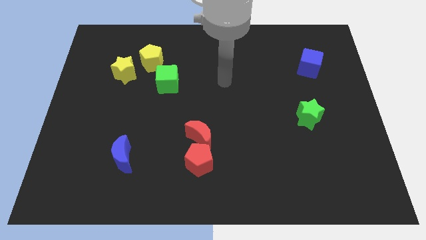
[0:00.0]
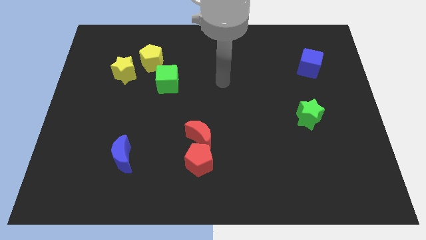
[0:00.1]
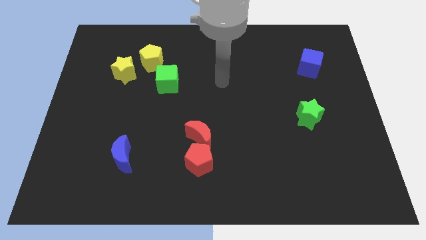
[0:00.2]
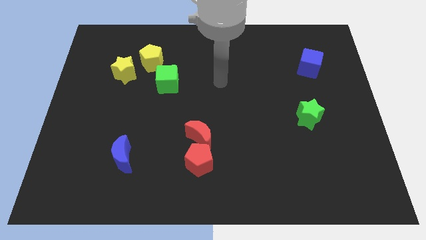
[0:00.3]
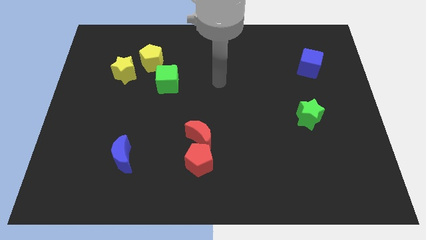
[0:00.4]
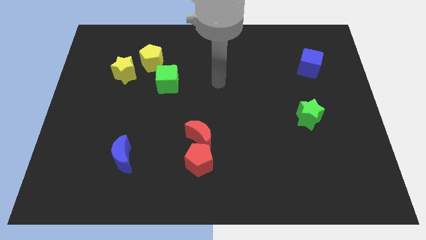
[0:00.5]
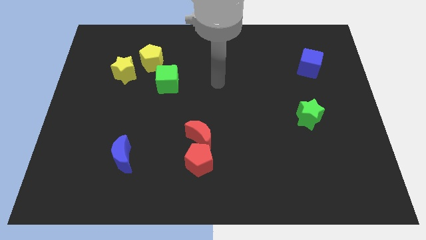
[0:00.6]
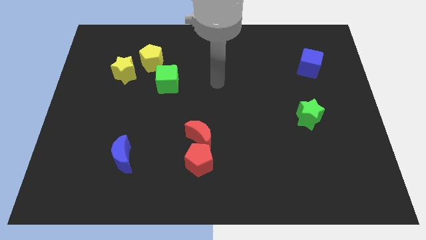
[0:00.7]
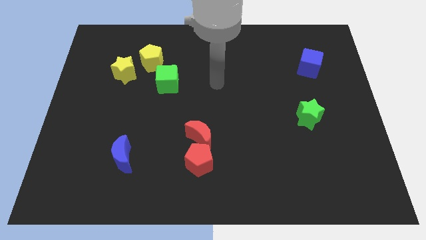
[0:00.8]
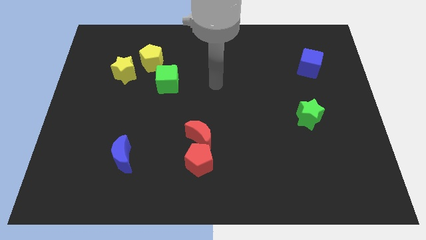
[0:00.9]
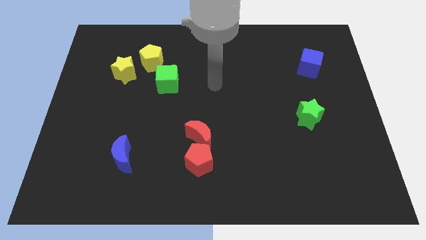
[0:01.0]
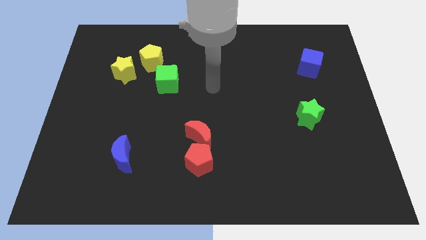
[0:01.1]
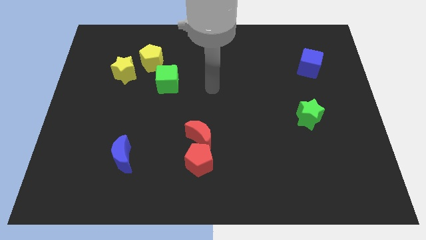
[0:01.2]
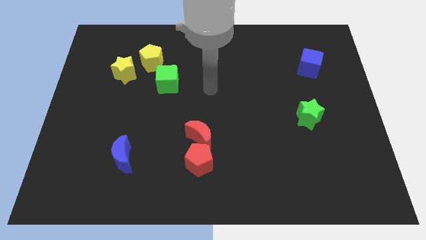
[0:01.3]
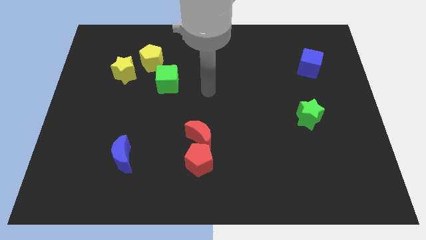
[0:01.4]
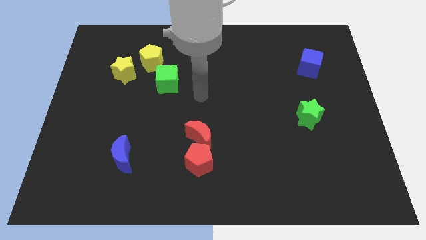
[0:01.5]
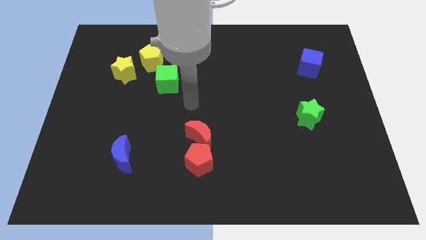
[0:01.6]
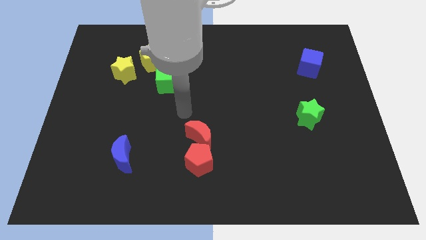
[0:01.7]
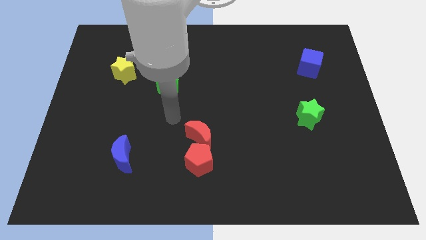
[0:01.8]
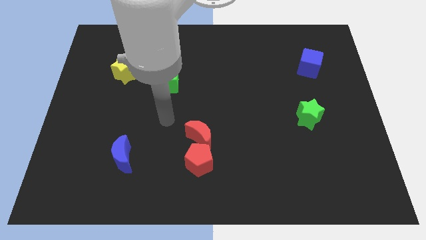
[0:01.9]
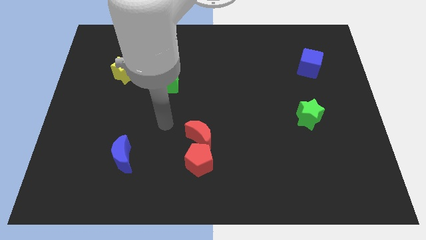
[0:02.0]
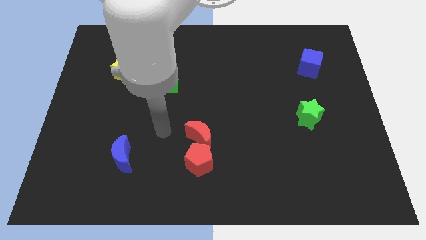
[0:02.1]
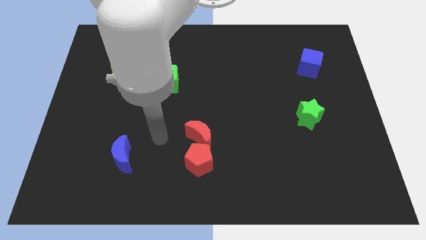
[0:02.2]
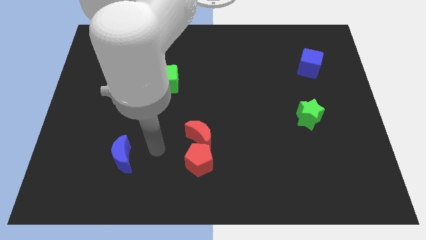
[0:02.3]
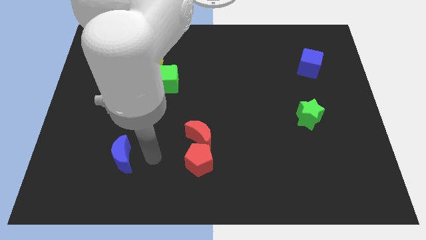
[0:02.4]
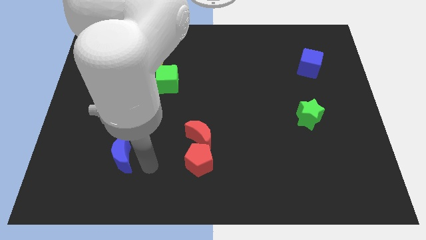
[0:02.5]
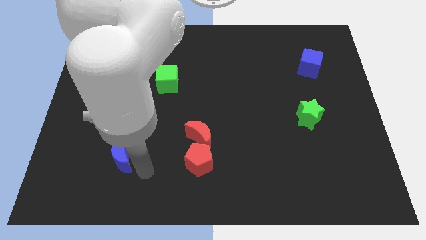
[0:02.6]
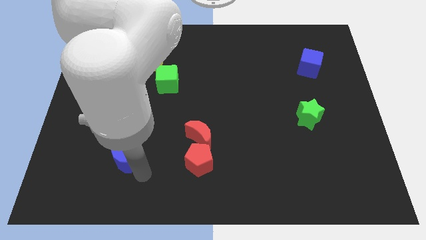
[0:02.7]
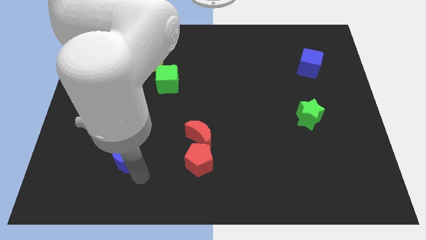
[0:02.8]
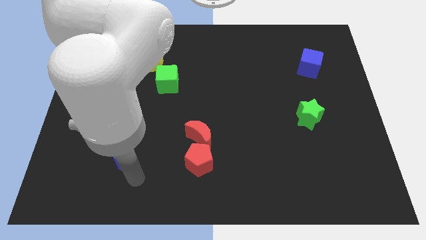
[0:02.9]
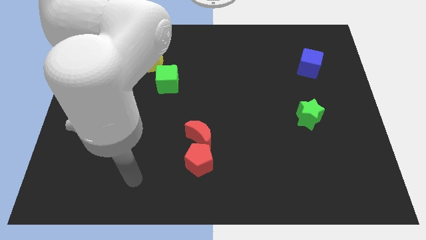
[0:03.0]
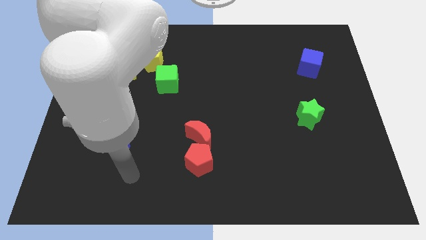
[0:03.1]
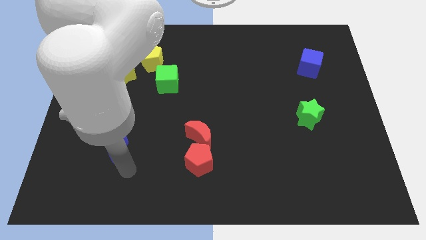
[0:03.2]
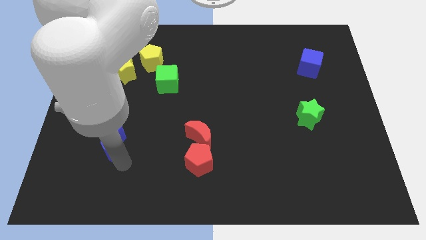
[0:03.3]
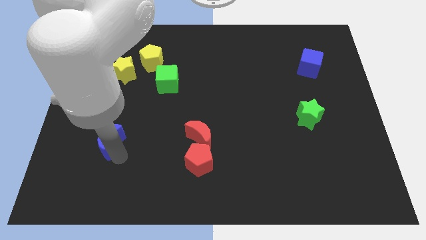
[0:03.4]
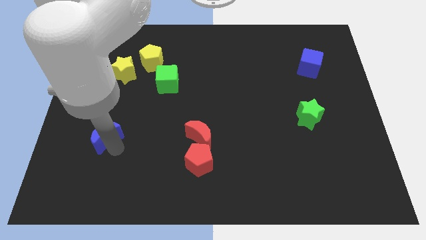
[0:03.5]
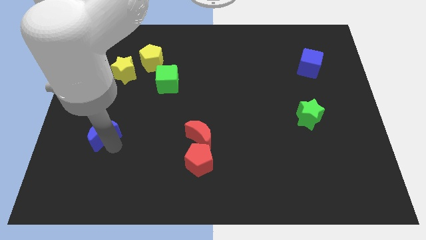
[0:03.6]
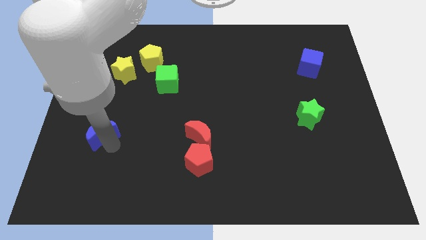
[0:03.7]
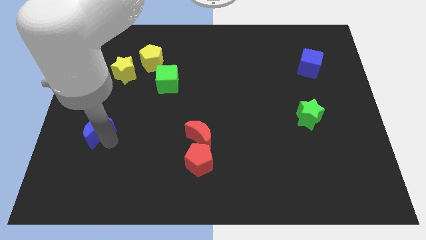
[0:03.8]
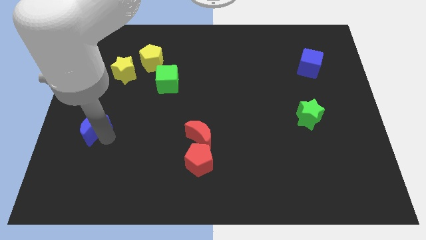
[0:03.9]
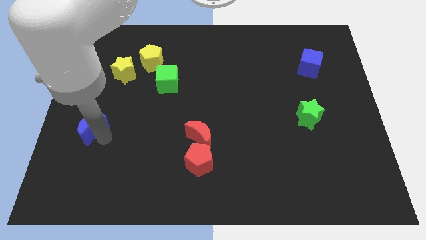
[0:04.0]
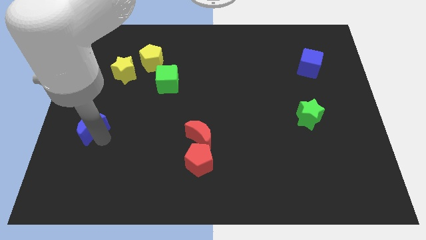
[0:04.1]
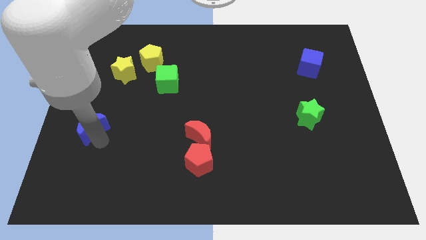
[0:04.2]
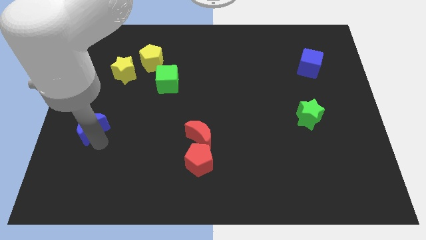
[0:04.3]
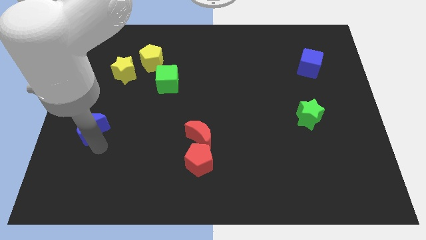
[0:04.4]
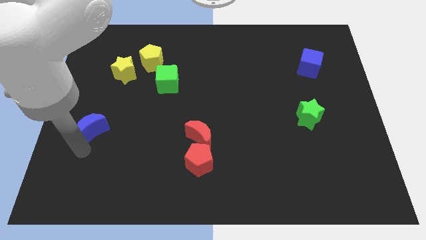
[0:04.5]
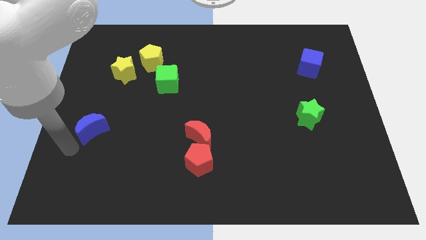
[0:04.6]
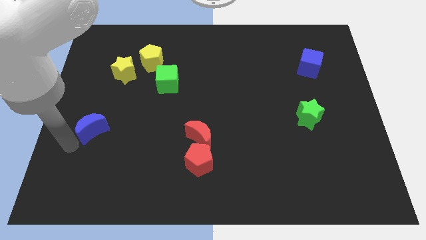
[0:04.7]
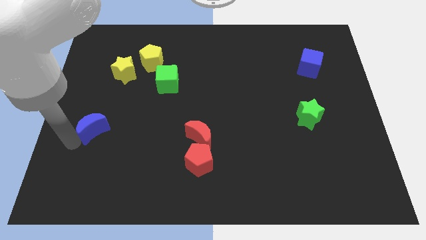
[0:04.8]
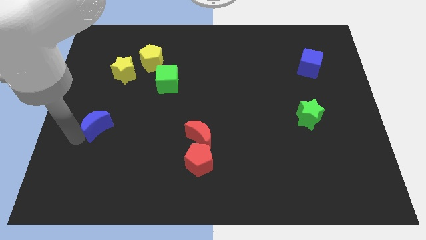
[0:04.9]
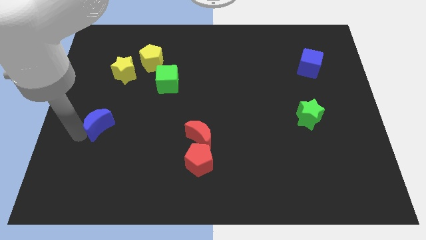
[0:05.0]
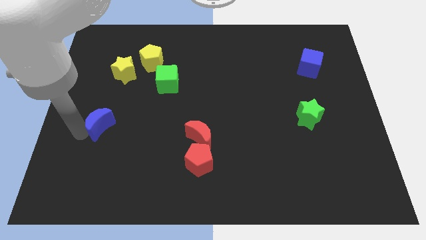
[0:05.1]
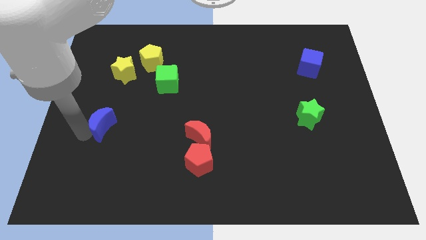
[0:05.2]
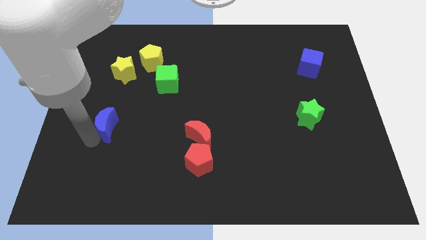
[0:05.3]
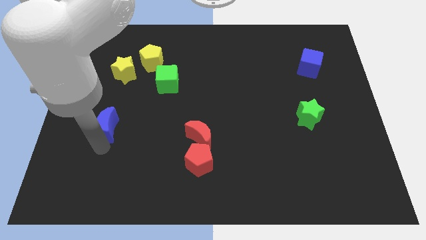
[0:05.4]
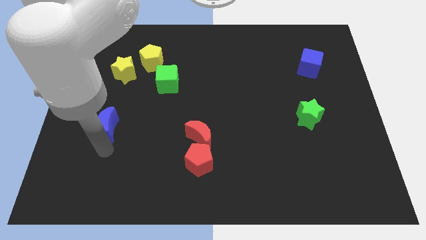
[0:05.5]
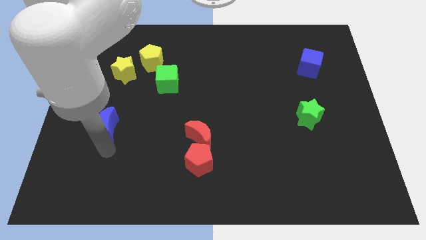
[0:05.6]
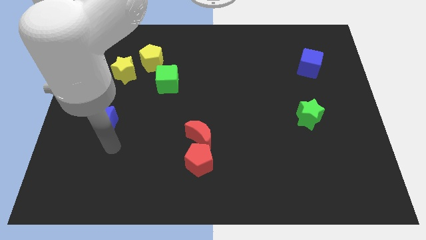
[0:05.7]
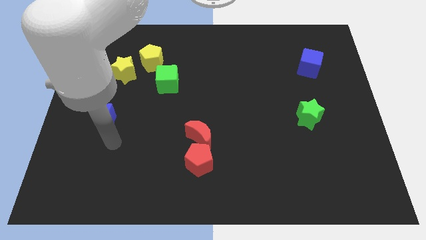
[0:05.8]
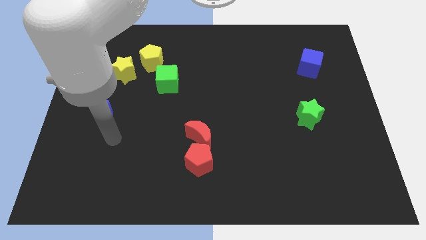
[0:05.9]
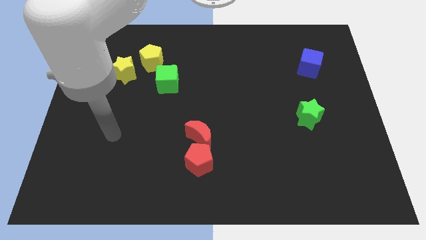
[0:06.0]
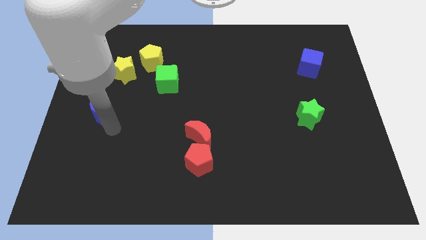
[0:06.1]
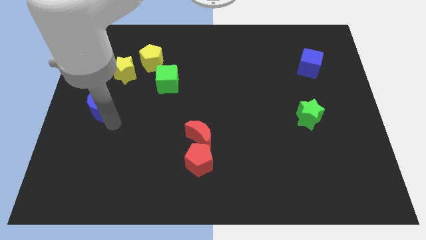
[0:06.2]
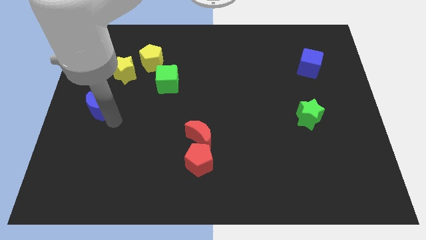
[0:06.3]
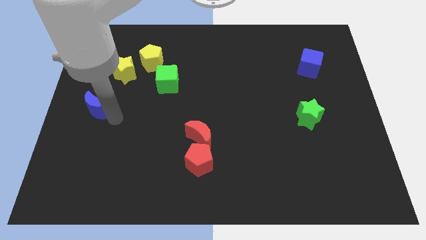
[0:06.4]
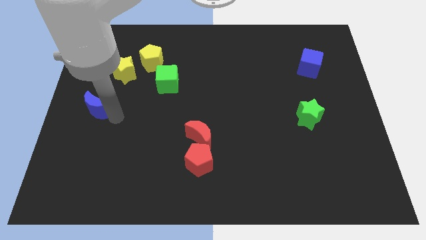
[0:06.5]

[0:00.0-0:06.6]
push the blue crescent towards the left center

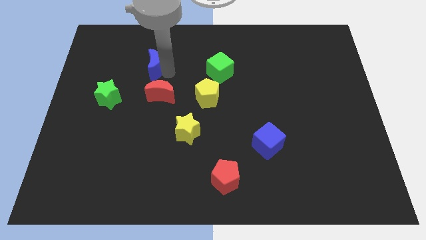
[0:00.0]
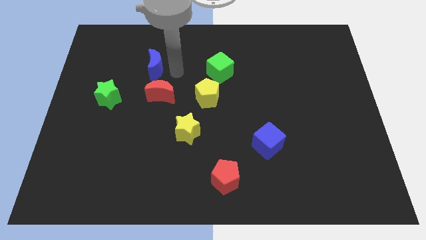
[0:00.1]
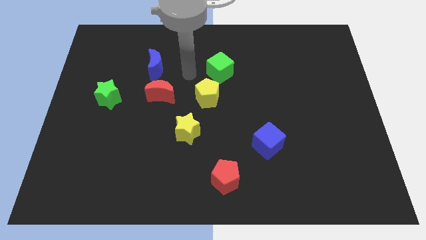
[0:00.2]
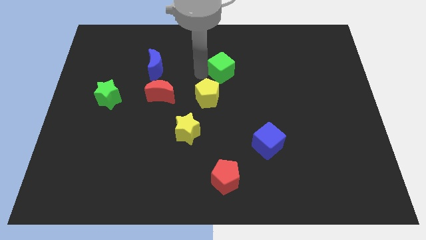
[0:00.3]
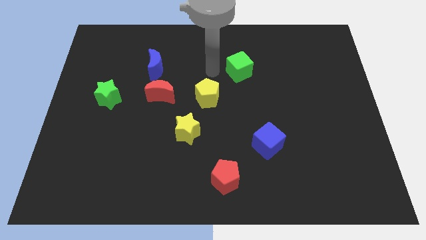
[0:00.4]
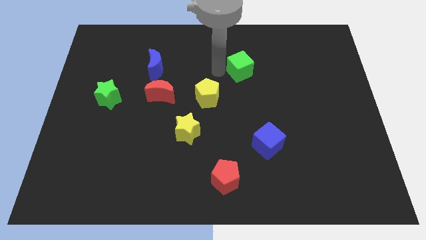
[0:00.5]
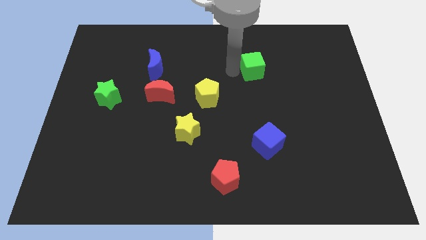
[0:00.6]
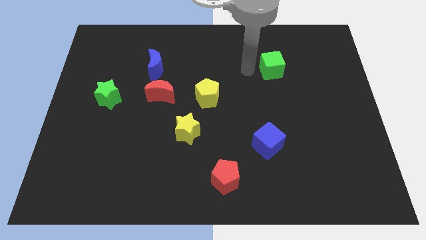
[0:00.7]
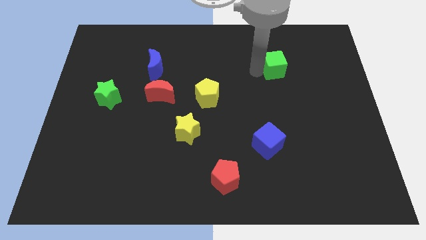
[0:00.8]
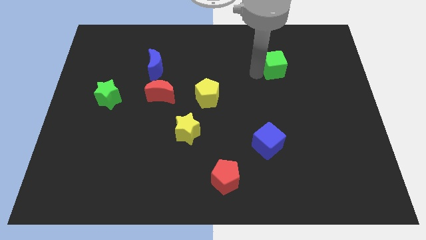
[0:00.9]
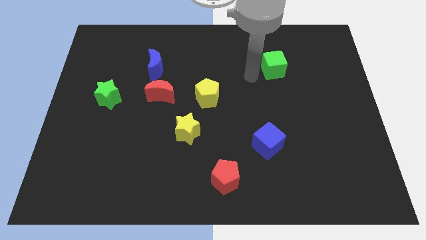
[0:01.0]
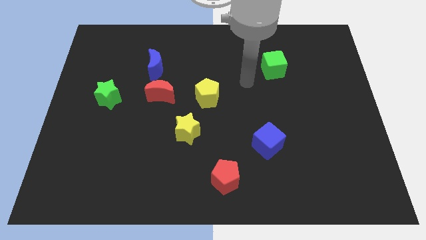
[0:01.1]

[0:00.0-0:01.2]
separate green cube from yellow pentagon

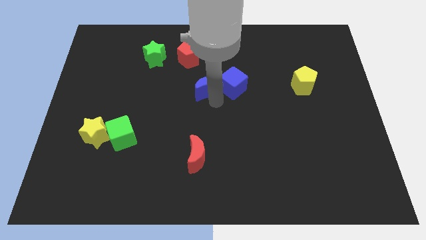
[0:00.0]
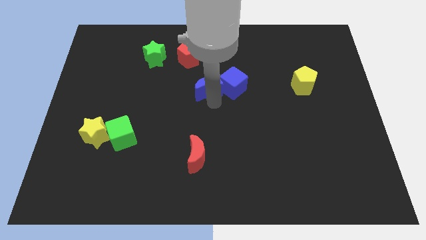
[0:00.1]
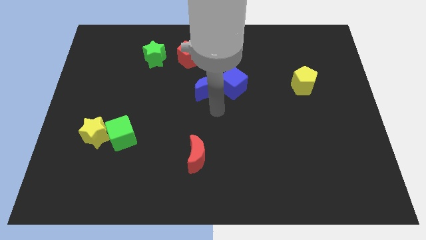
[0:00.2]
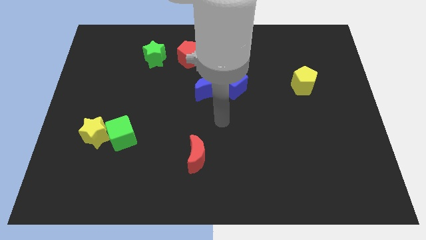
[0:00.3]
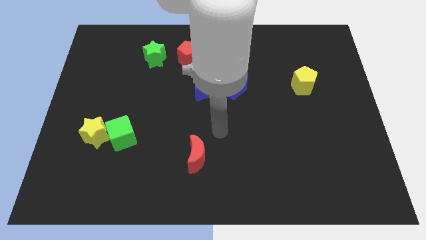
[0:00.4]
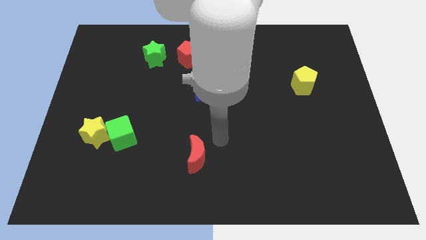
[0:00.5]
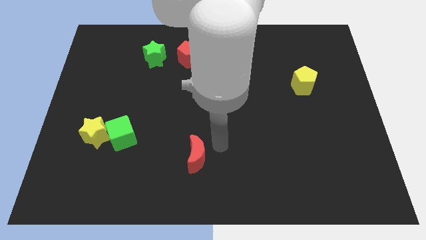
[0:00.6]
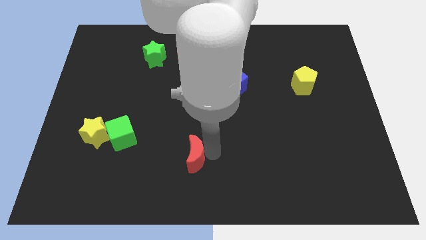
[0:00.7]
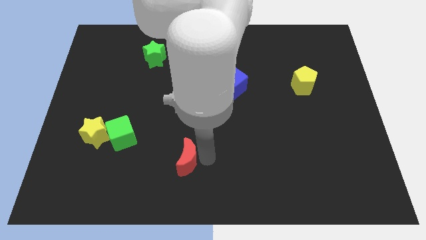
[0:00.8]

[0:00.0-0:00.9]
place the arm right to the red moon

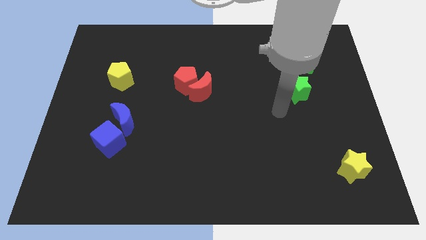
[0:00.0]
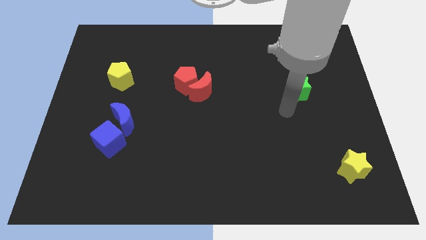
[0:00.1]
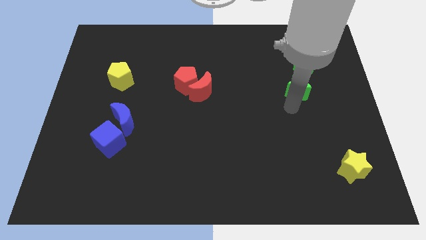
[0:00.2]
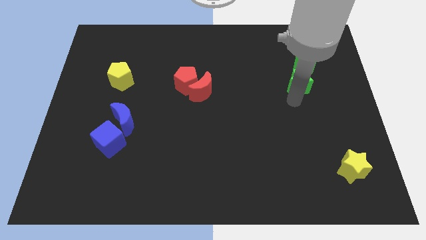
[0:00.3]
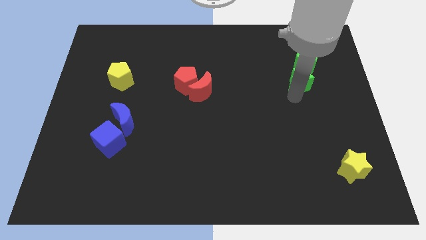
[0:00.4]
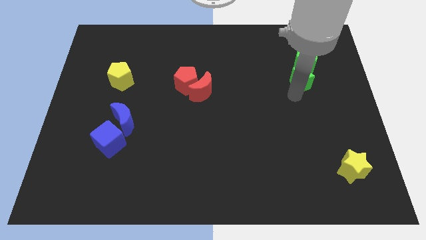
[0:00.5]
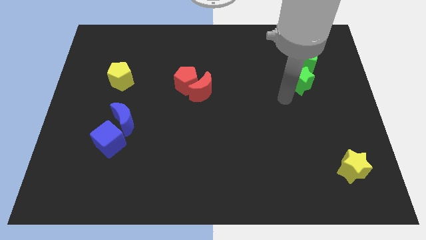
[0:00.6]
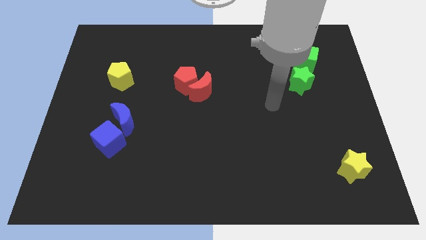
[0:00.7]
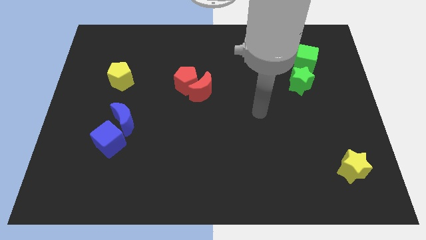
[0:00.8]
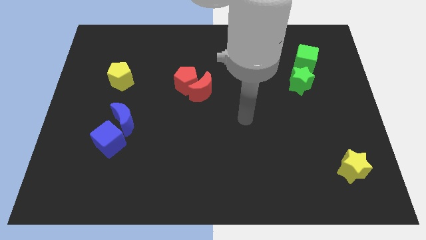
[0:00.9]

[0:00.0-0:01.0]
push the green star into the green cube
